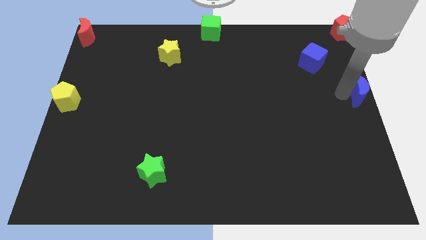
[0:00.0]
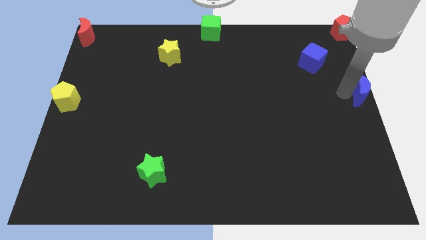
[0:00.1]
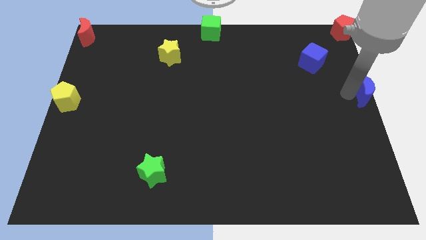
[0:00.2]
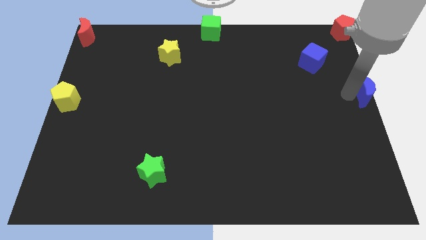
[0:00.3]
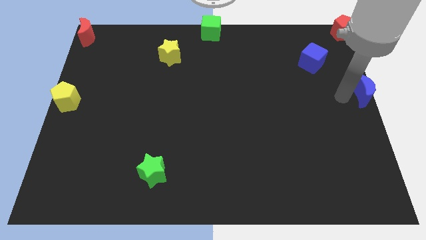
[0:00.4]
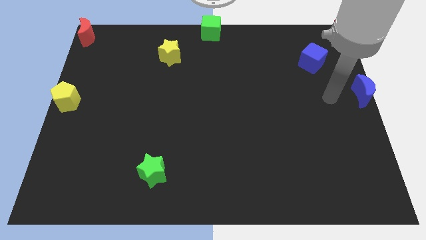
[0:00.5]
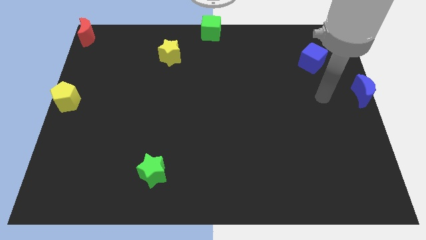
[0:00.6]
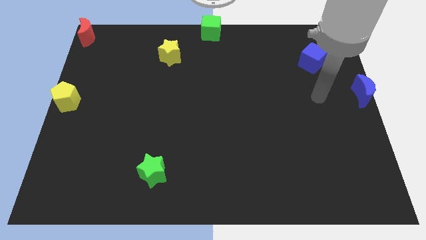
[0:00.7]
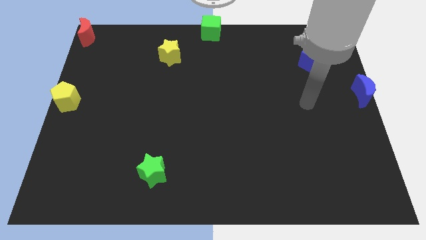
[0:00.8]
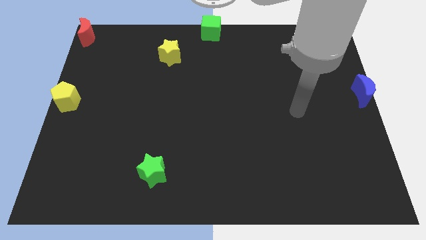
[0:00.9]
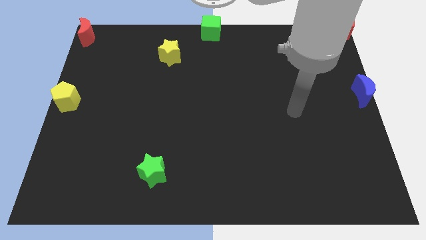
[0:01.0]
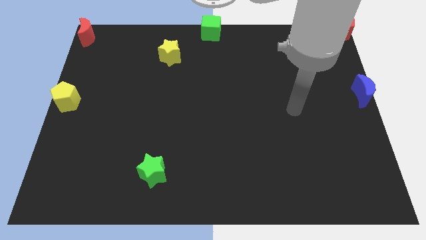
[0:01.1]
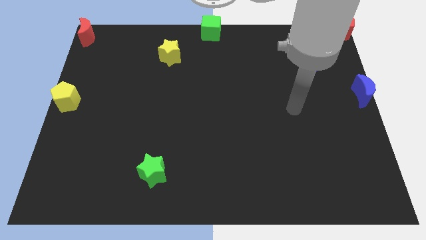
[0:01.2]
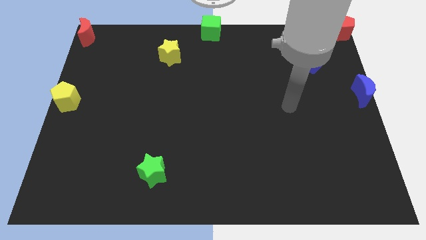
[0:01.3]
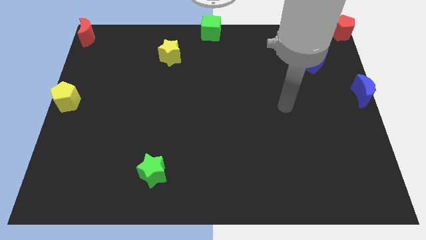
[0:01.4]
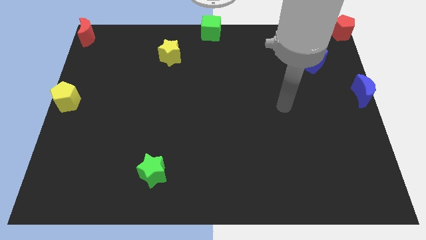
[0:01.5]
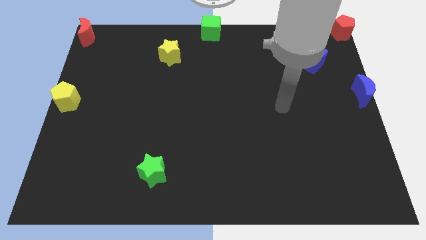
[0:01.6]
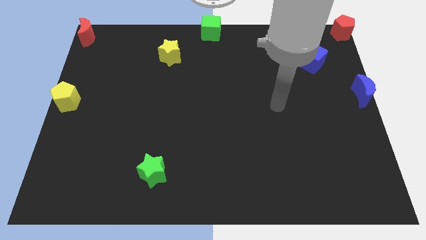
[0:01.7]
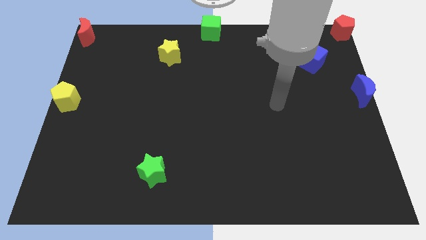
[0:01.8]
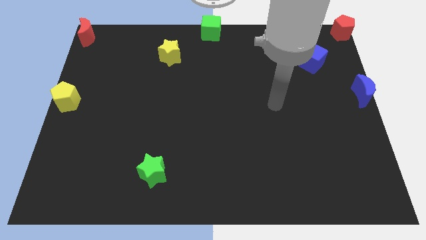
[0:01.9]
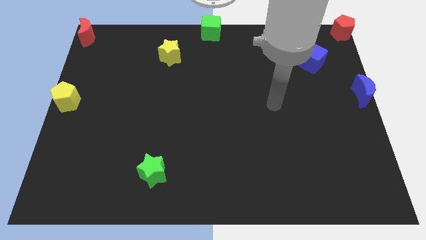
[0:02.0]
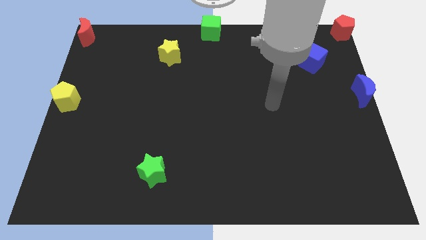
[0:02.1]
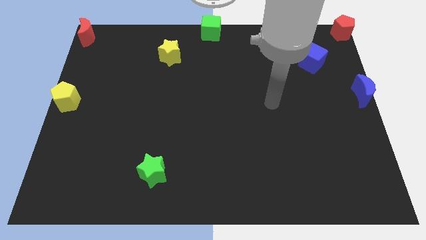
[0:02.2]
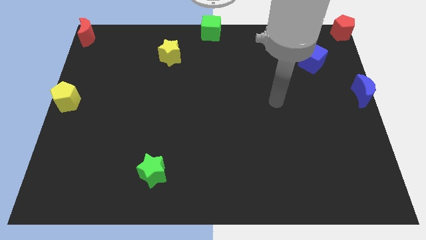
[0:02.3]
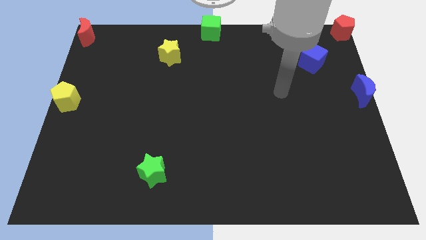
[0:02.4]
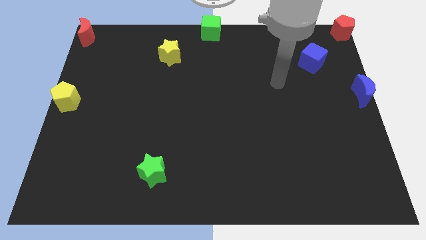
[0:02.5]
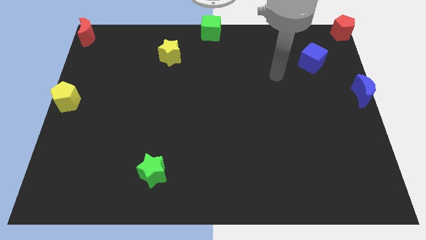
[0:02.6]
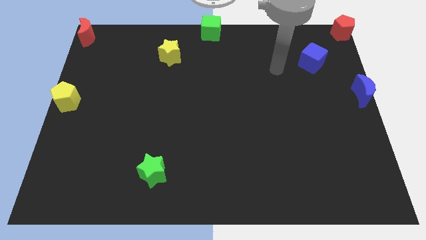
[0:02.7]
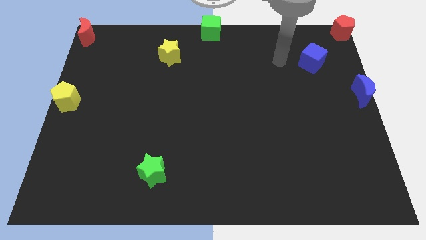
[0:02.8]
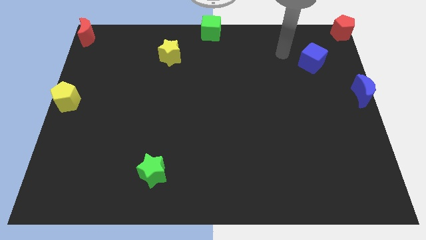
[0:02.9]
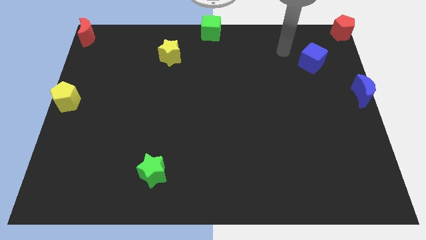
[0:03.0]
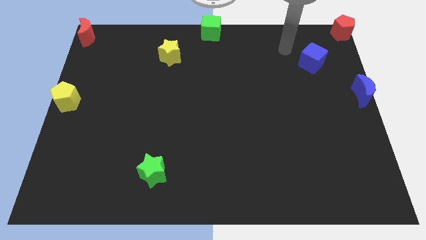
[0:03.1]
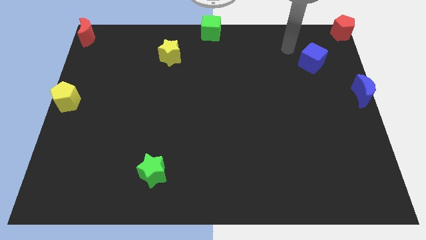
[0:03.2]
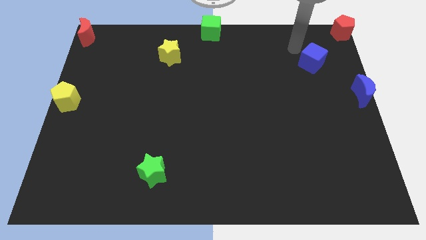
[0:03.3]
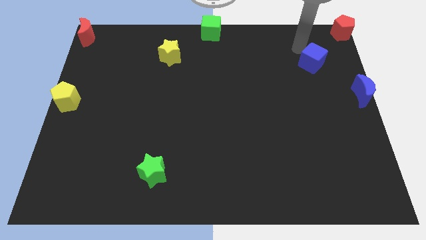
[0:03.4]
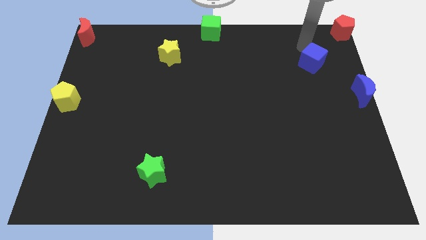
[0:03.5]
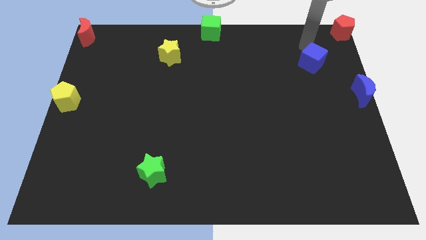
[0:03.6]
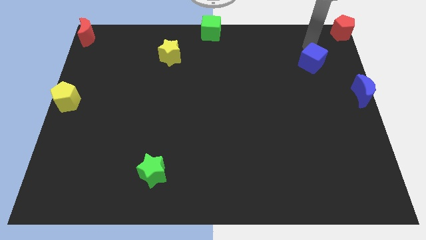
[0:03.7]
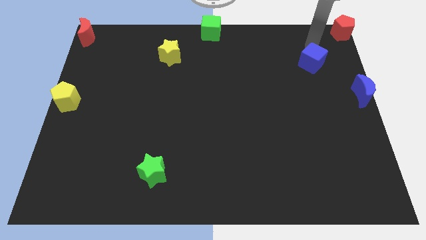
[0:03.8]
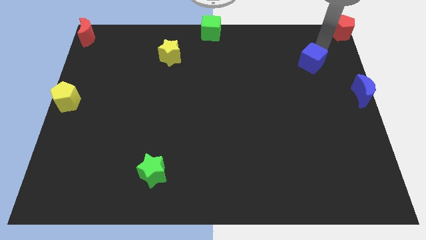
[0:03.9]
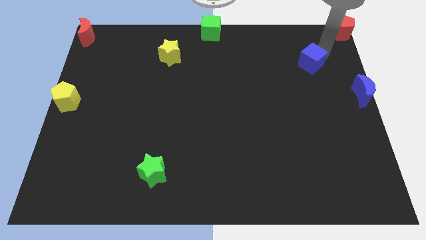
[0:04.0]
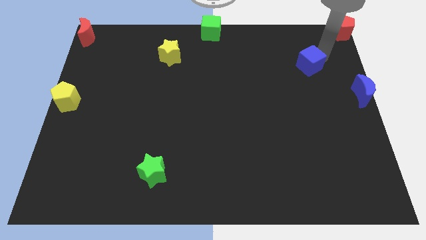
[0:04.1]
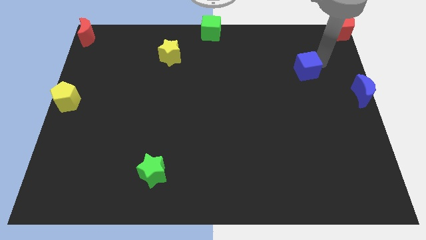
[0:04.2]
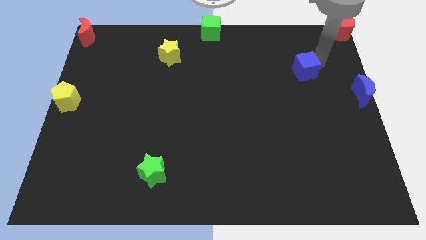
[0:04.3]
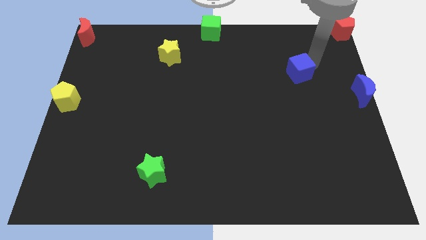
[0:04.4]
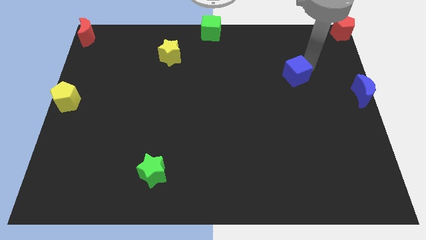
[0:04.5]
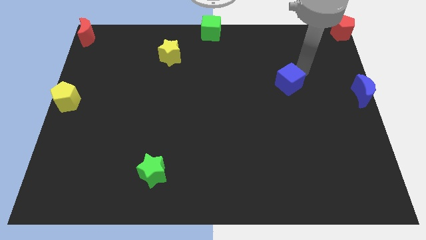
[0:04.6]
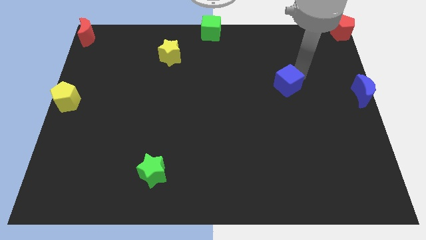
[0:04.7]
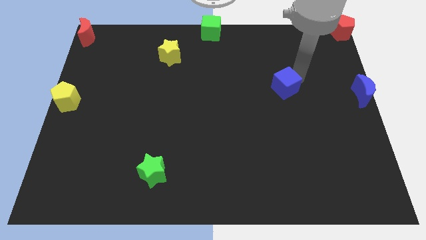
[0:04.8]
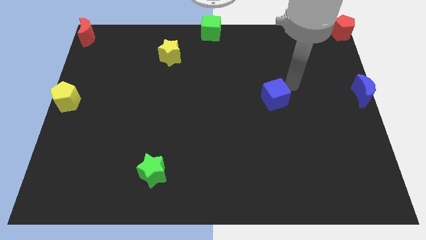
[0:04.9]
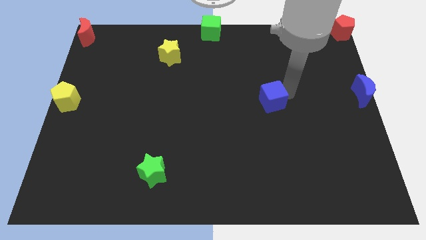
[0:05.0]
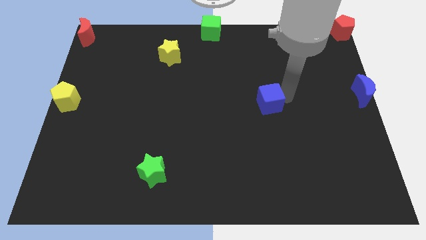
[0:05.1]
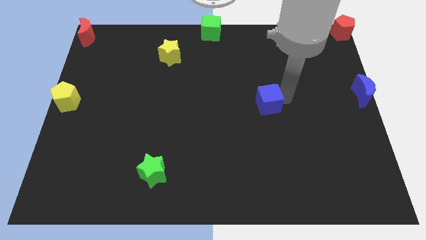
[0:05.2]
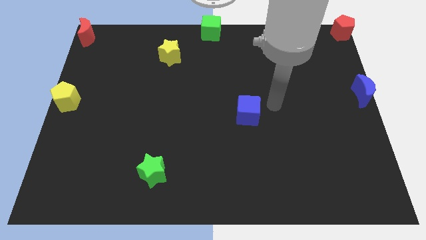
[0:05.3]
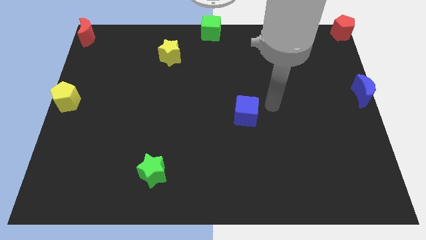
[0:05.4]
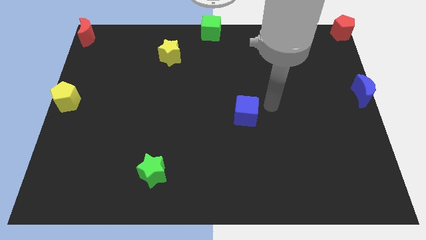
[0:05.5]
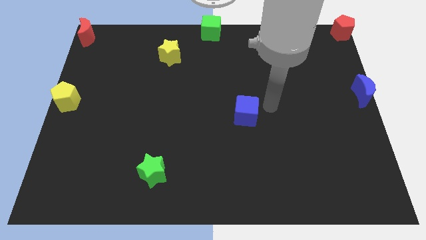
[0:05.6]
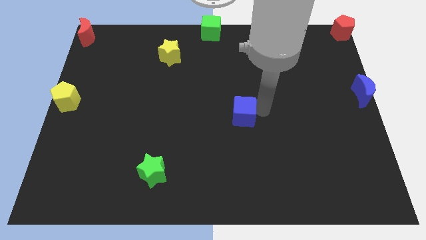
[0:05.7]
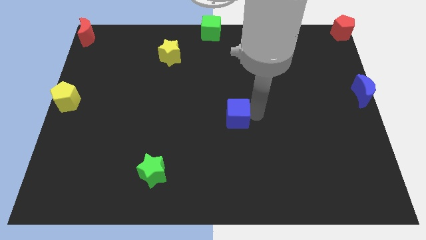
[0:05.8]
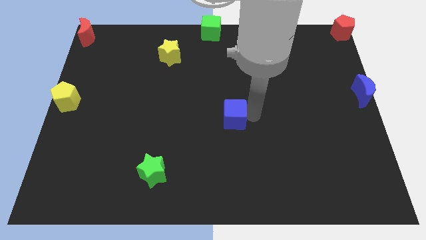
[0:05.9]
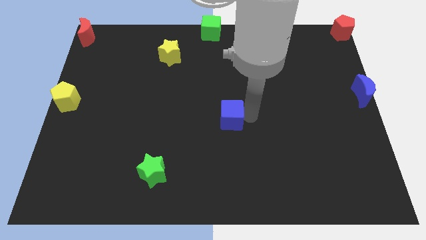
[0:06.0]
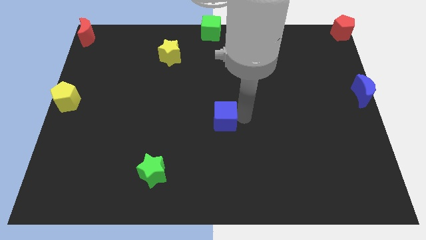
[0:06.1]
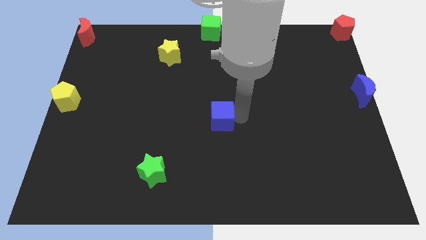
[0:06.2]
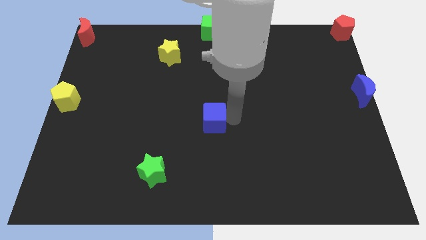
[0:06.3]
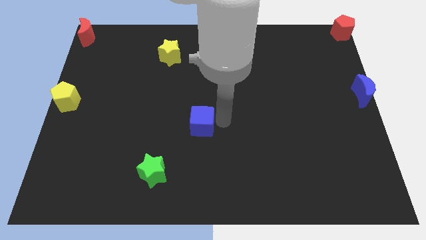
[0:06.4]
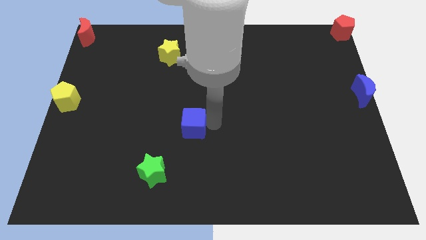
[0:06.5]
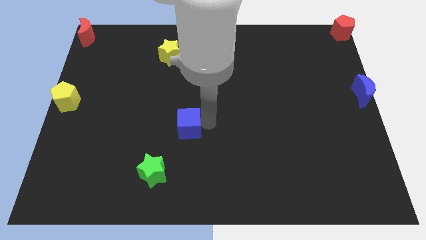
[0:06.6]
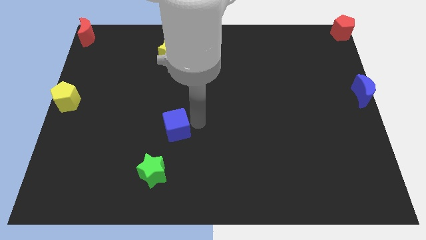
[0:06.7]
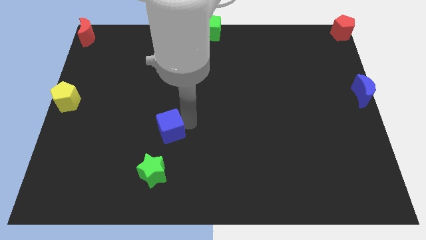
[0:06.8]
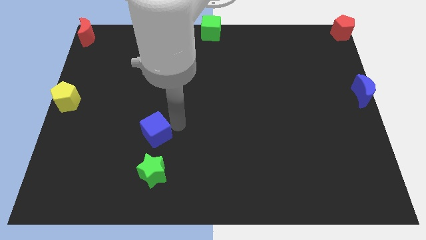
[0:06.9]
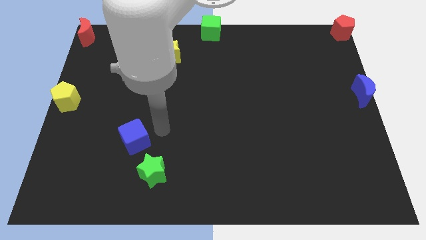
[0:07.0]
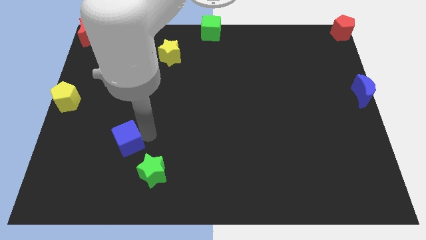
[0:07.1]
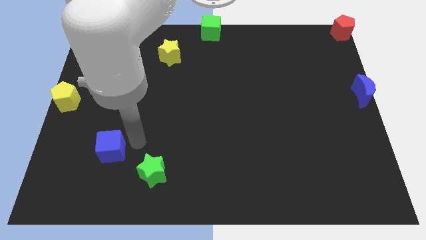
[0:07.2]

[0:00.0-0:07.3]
move the blue cube to left side of green star

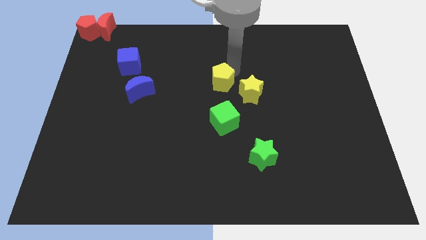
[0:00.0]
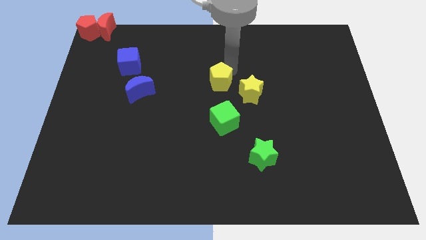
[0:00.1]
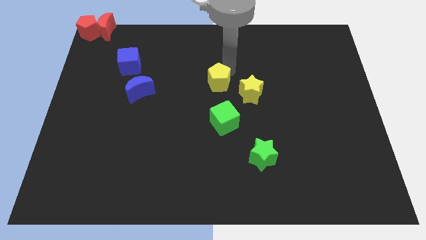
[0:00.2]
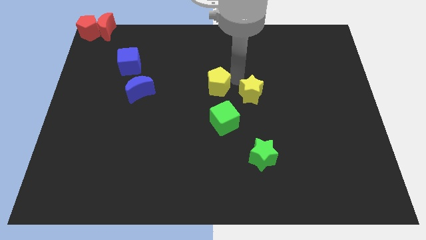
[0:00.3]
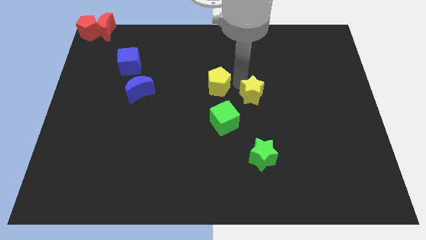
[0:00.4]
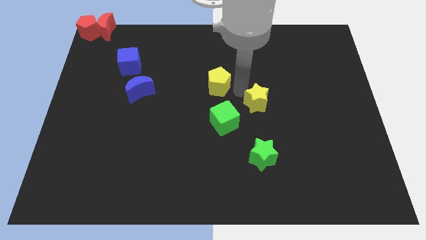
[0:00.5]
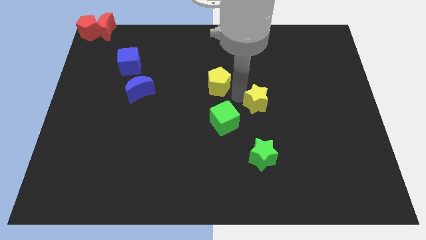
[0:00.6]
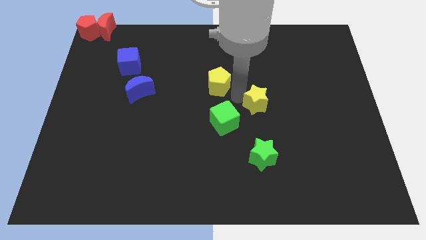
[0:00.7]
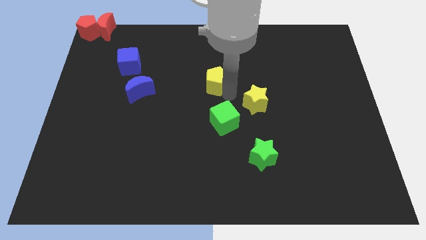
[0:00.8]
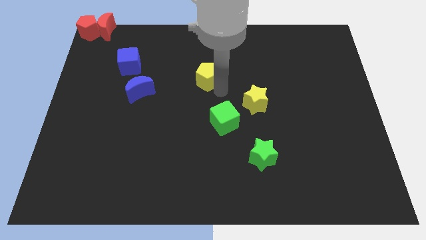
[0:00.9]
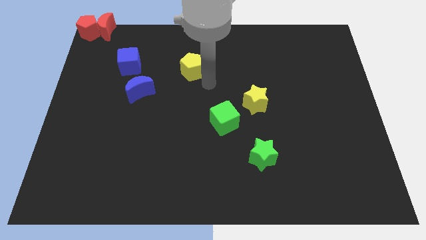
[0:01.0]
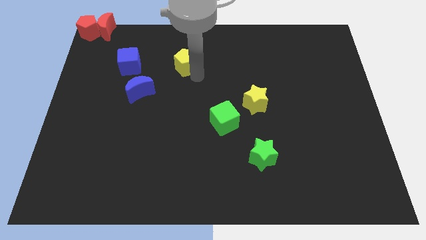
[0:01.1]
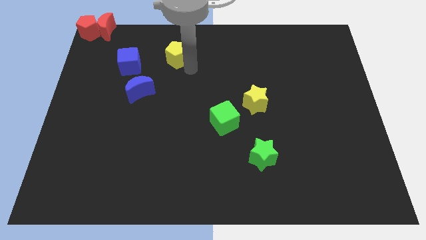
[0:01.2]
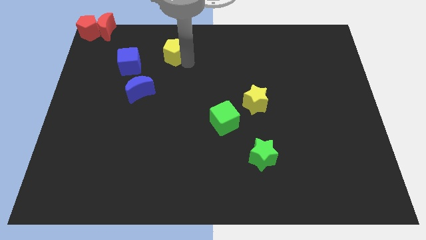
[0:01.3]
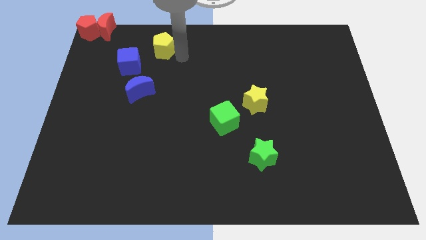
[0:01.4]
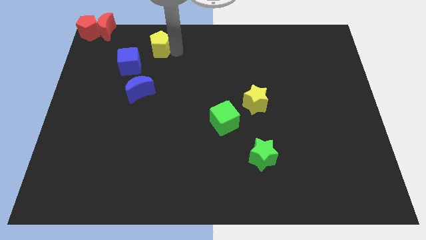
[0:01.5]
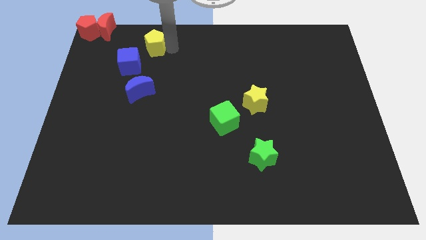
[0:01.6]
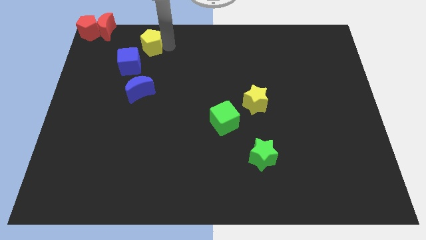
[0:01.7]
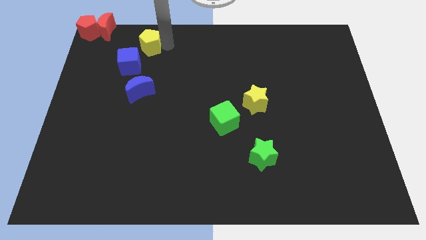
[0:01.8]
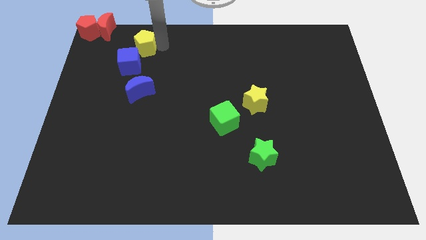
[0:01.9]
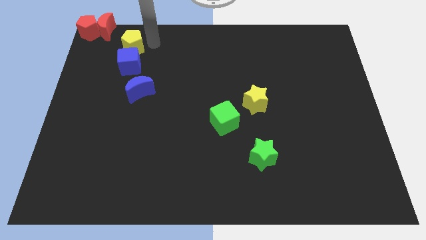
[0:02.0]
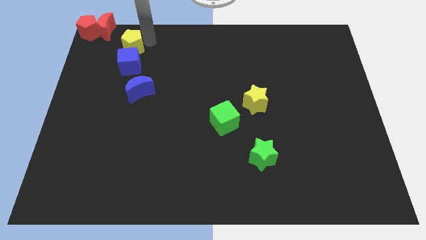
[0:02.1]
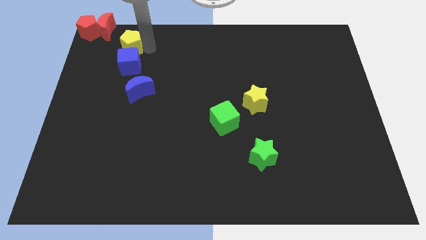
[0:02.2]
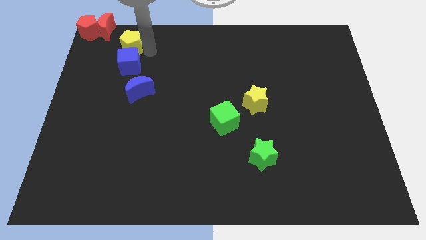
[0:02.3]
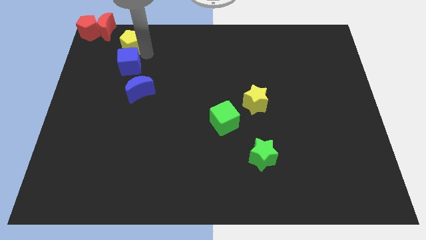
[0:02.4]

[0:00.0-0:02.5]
place the yellow pentagon above the blue cube
